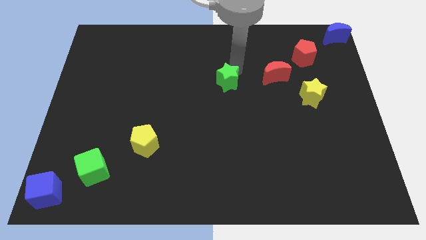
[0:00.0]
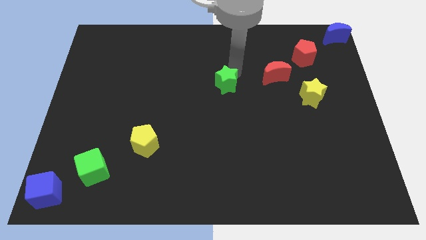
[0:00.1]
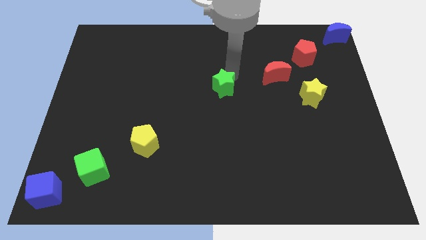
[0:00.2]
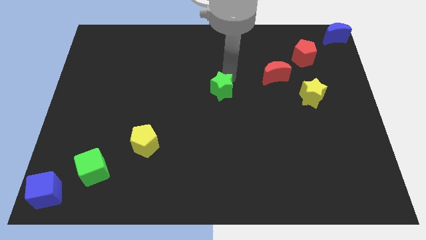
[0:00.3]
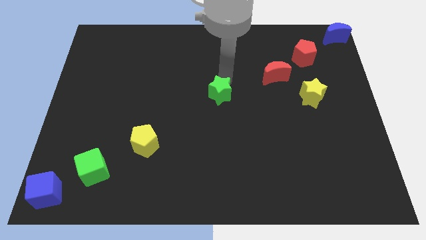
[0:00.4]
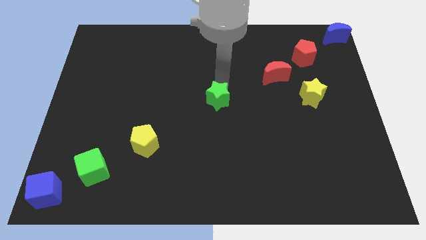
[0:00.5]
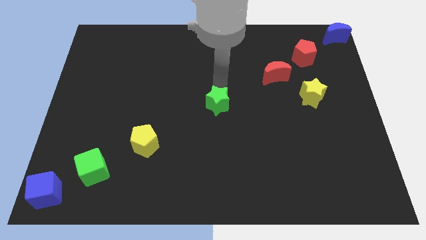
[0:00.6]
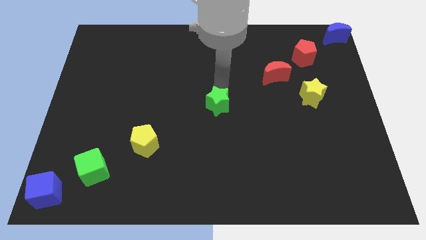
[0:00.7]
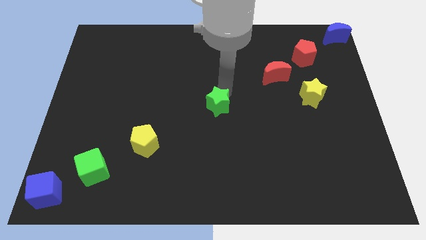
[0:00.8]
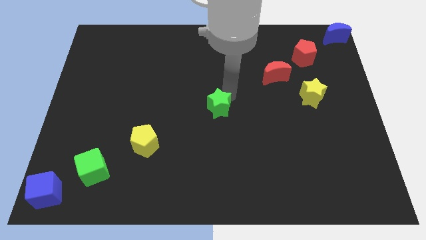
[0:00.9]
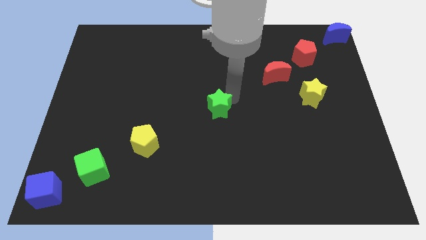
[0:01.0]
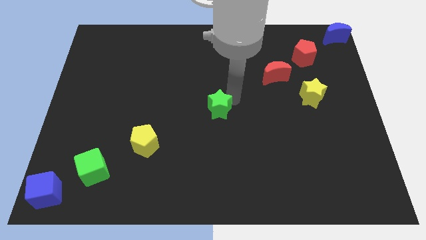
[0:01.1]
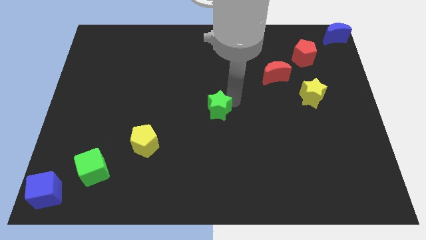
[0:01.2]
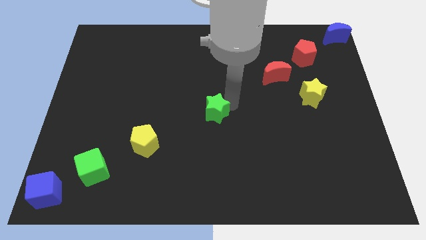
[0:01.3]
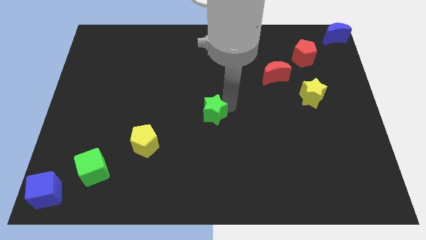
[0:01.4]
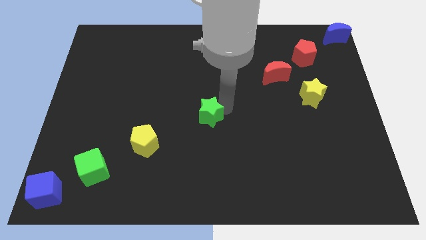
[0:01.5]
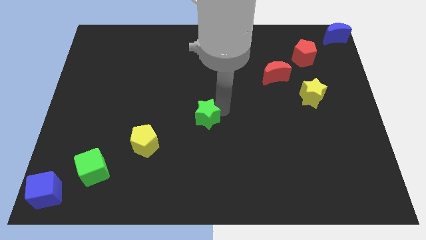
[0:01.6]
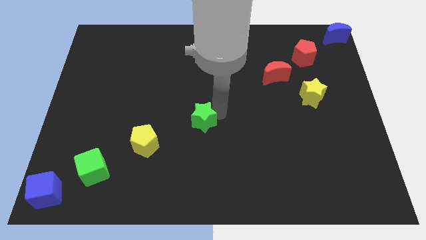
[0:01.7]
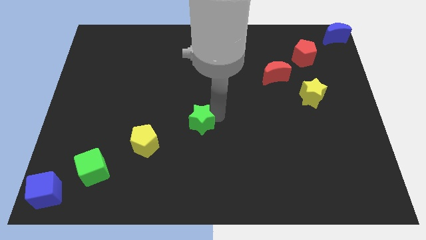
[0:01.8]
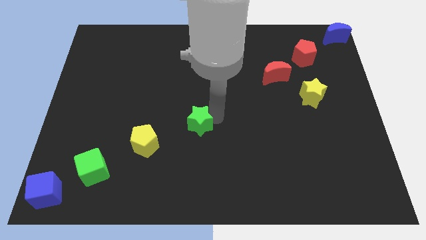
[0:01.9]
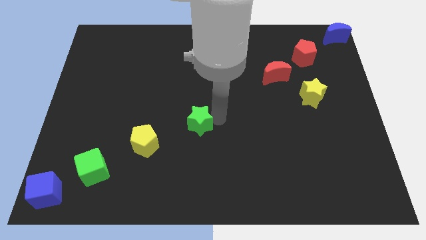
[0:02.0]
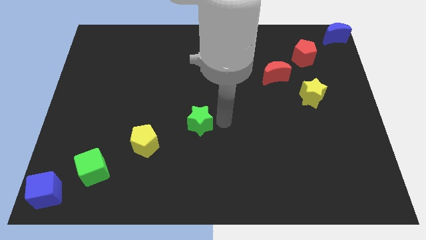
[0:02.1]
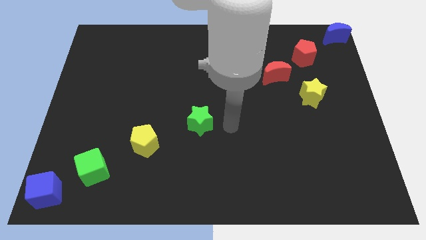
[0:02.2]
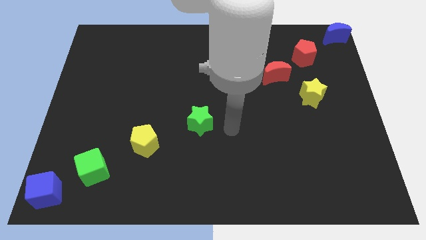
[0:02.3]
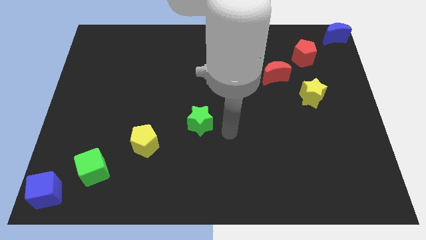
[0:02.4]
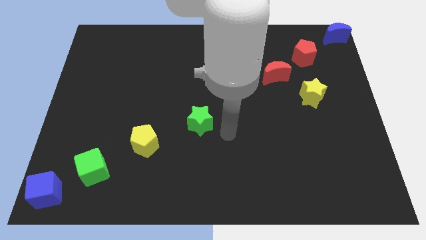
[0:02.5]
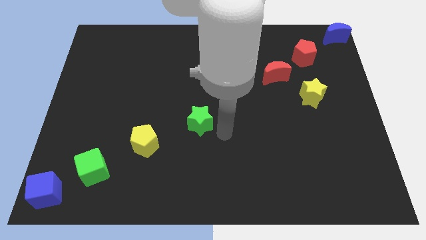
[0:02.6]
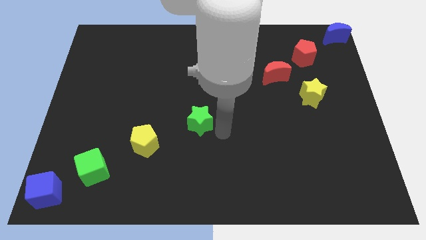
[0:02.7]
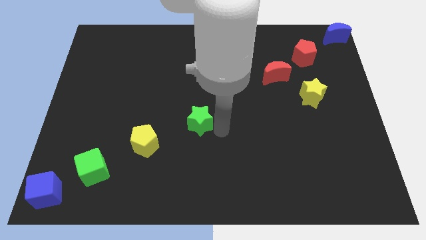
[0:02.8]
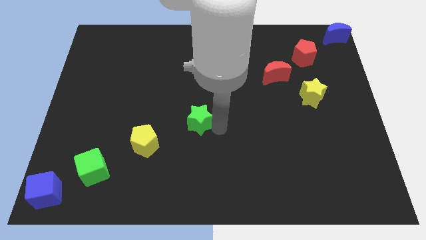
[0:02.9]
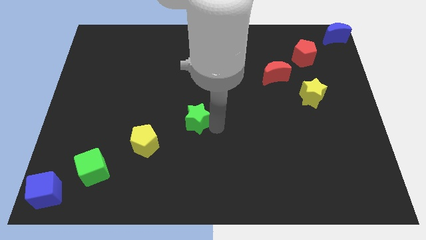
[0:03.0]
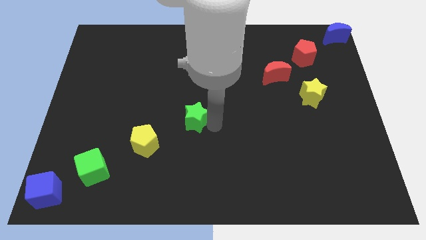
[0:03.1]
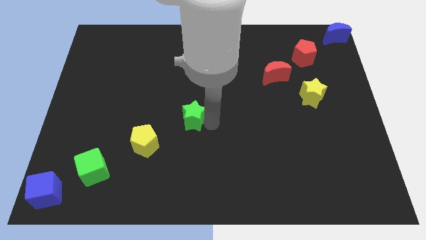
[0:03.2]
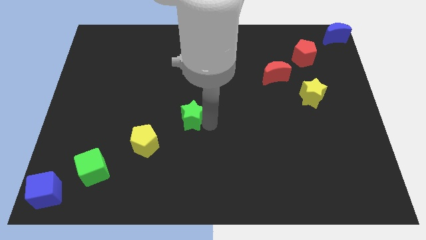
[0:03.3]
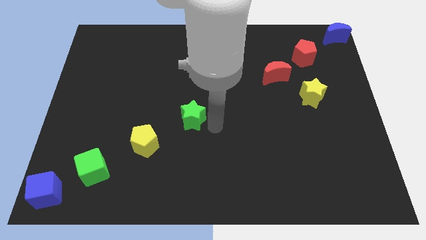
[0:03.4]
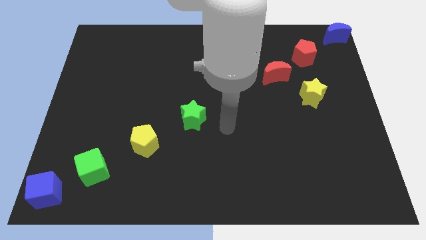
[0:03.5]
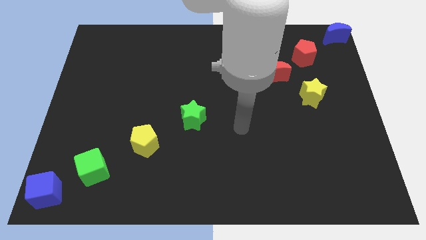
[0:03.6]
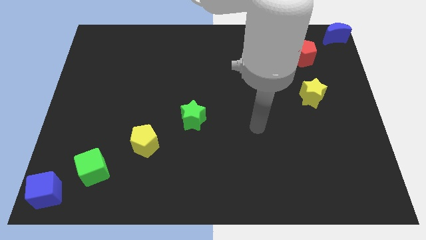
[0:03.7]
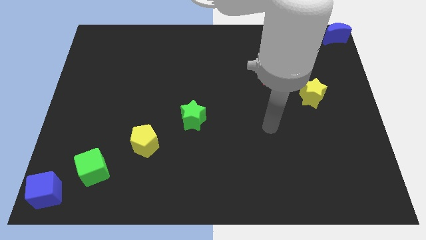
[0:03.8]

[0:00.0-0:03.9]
place green star right to yellow pentagon

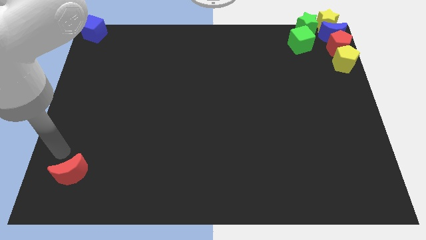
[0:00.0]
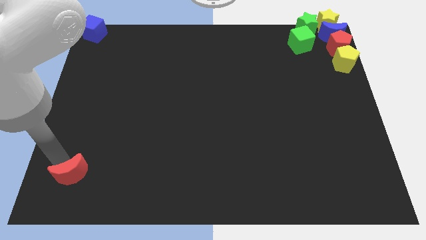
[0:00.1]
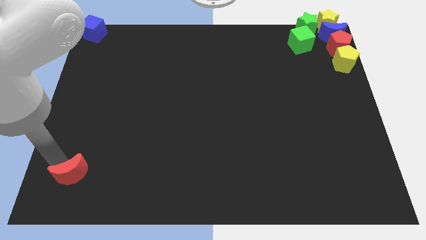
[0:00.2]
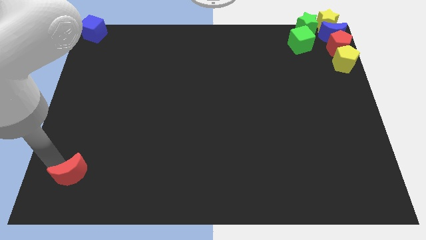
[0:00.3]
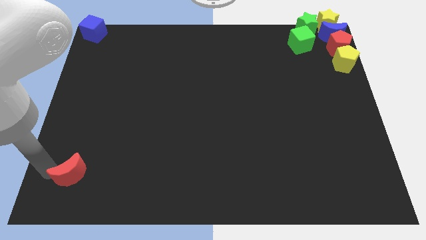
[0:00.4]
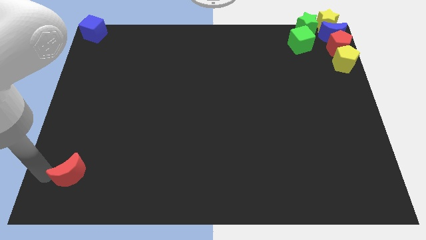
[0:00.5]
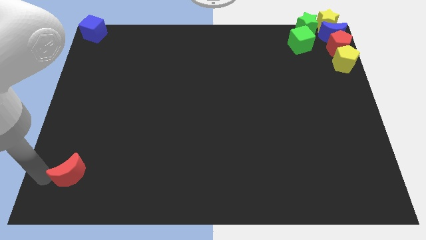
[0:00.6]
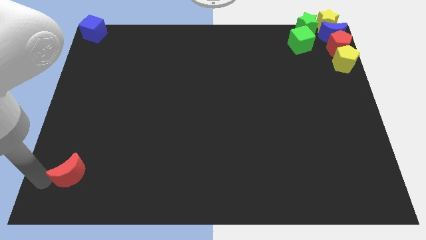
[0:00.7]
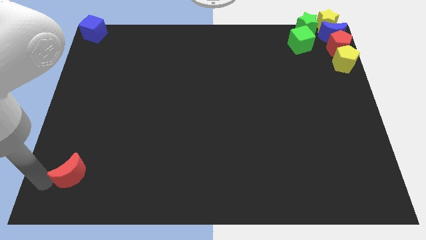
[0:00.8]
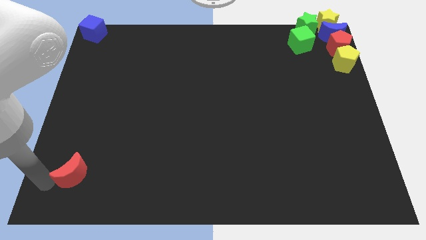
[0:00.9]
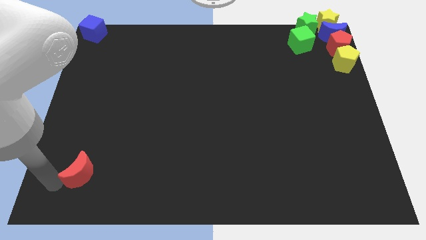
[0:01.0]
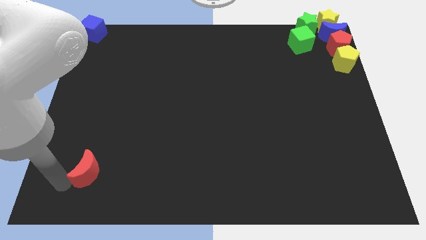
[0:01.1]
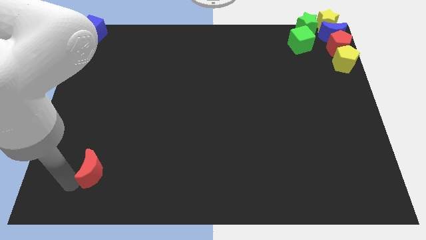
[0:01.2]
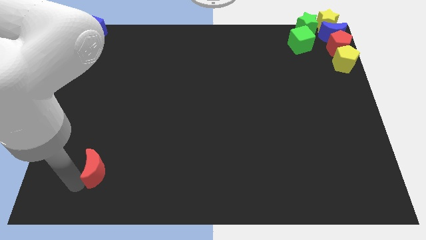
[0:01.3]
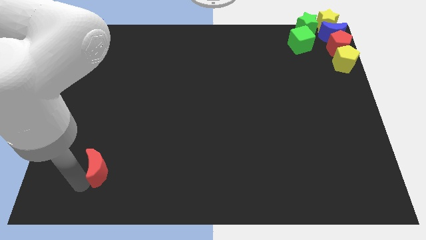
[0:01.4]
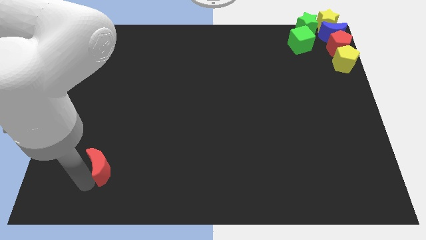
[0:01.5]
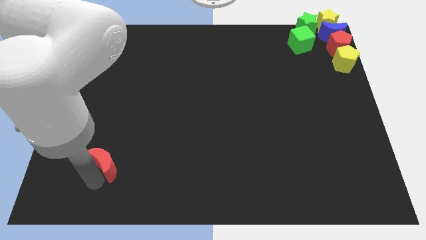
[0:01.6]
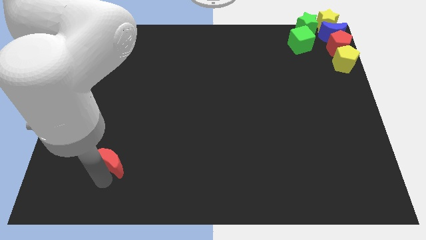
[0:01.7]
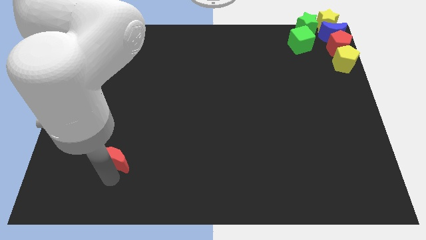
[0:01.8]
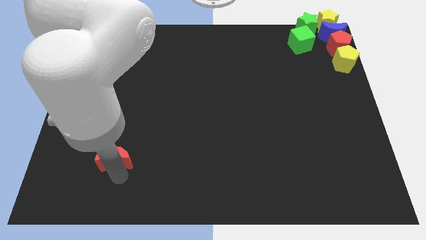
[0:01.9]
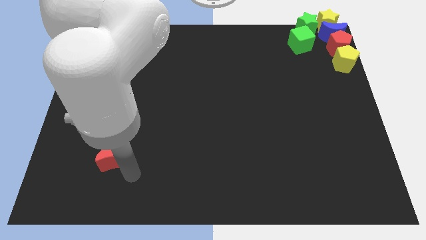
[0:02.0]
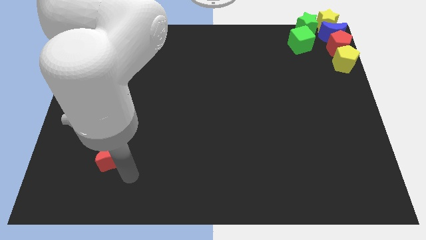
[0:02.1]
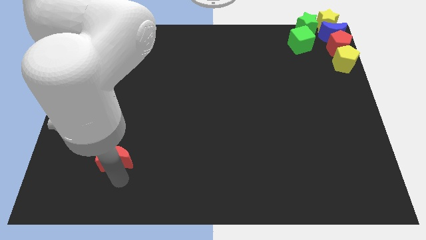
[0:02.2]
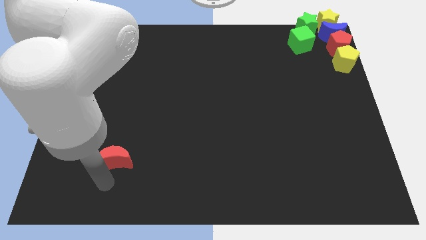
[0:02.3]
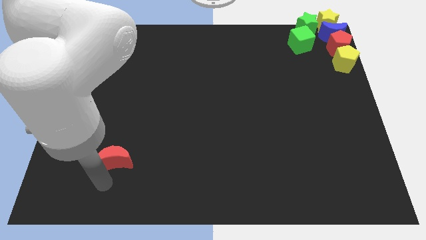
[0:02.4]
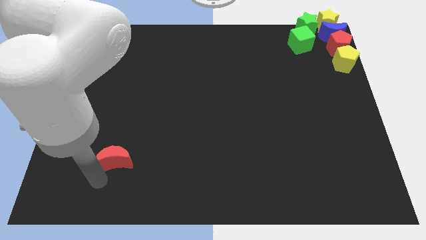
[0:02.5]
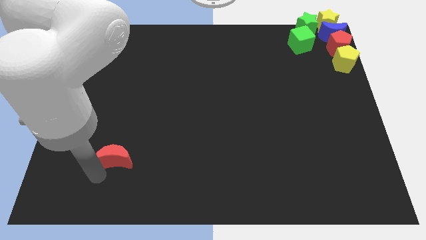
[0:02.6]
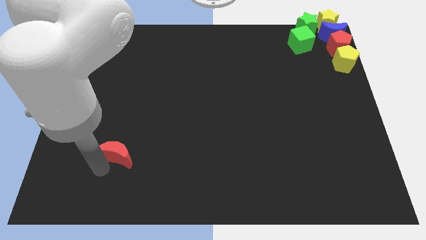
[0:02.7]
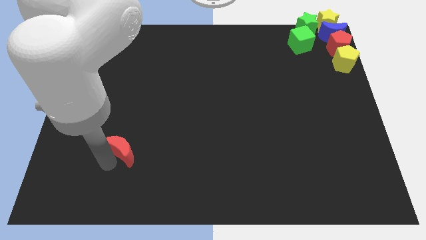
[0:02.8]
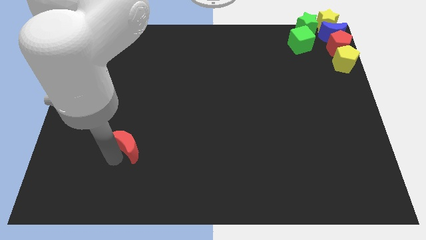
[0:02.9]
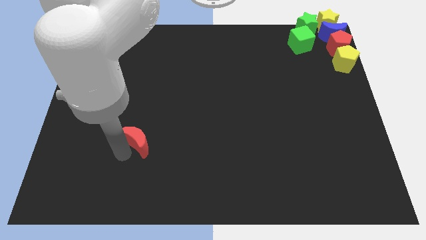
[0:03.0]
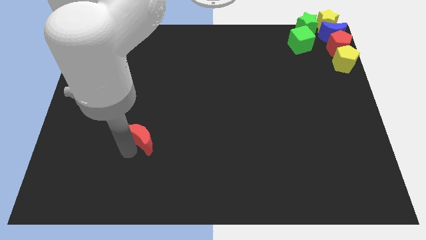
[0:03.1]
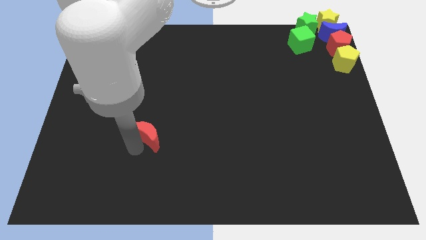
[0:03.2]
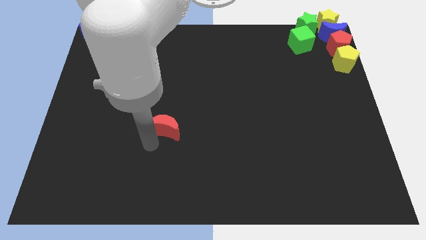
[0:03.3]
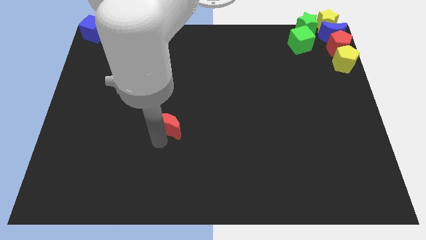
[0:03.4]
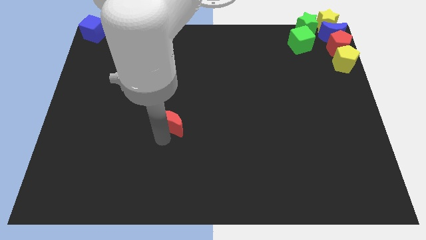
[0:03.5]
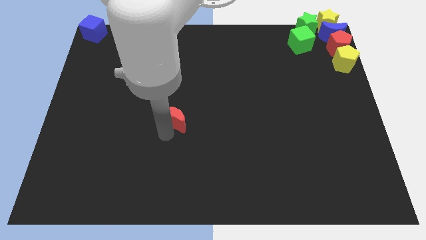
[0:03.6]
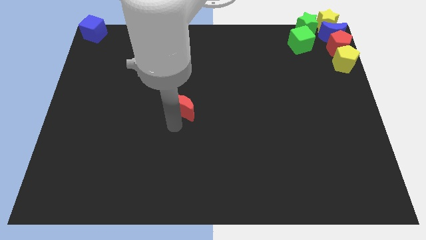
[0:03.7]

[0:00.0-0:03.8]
place the red moon to the center

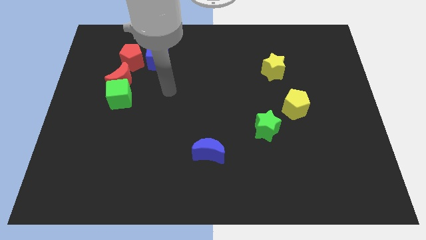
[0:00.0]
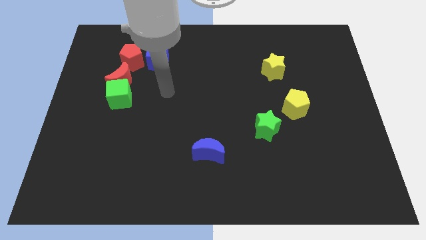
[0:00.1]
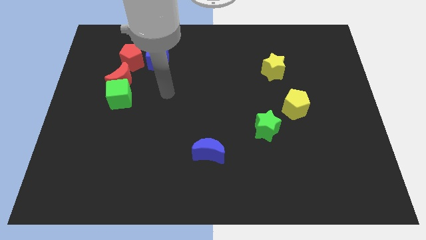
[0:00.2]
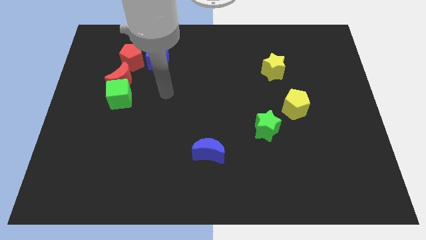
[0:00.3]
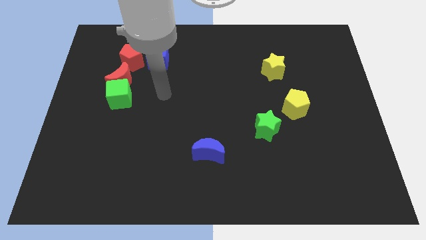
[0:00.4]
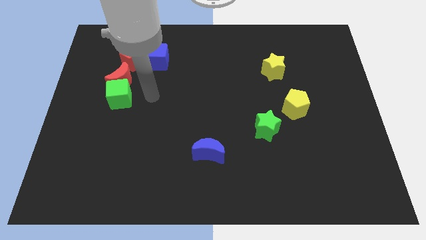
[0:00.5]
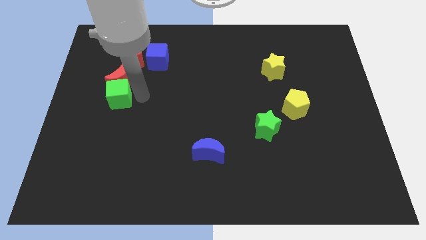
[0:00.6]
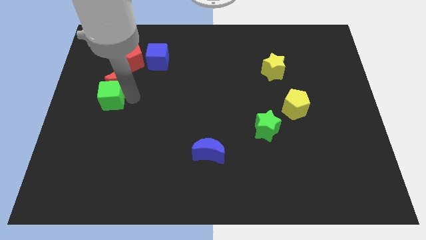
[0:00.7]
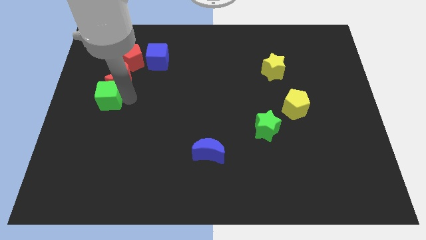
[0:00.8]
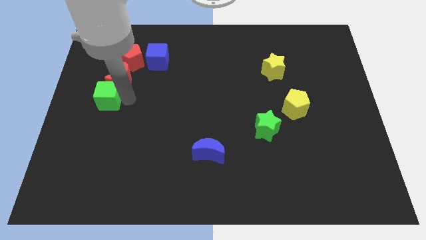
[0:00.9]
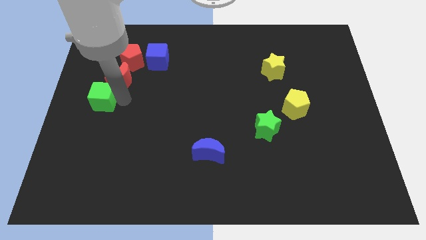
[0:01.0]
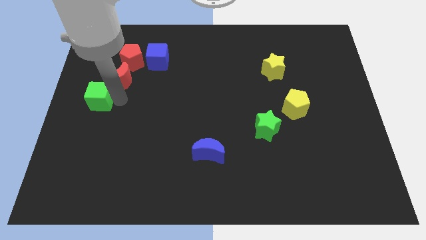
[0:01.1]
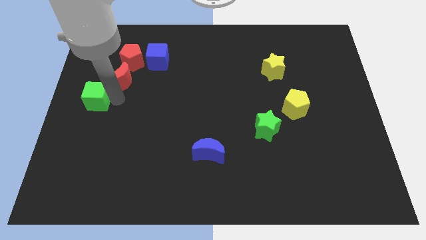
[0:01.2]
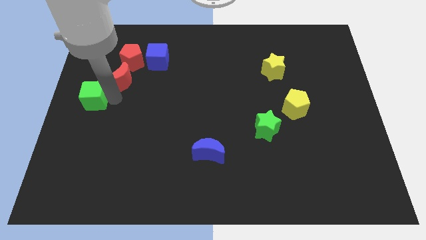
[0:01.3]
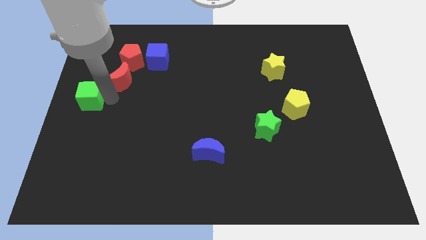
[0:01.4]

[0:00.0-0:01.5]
place the green cube at the bottom left side of red crescent
